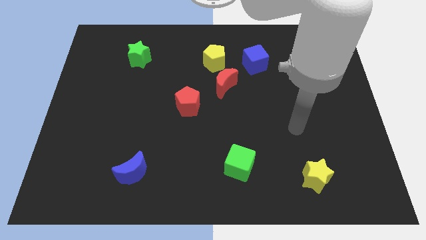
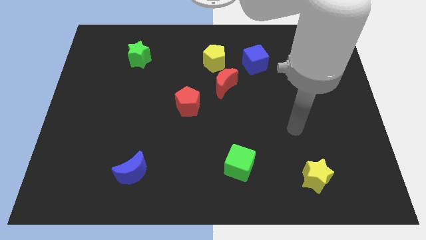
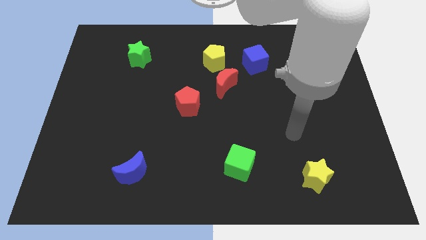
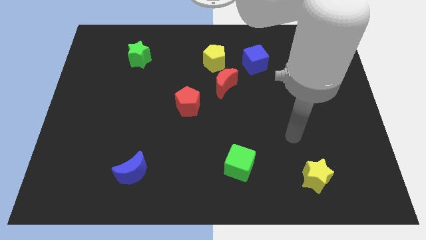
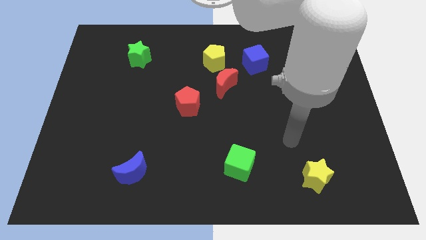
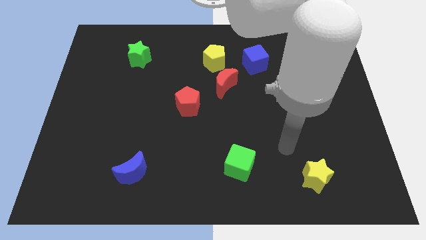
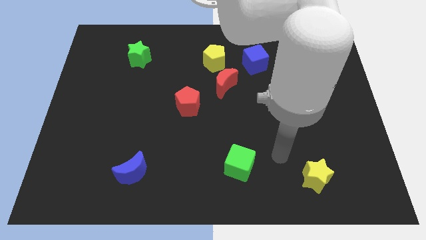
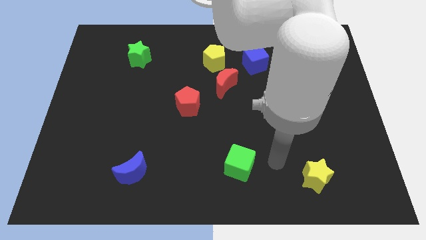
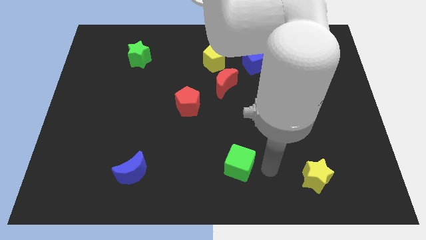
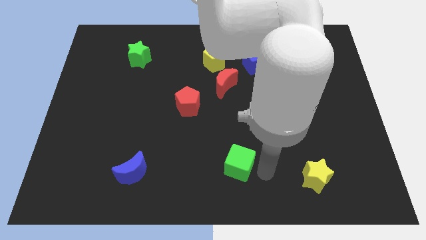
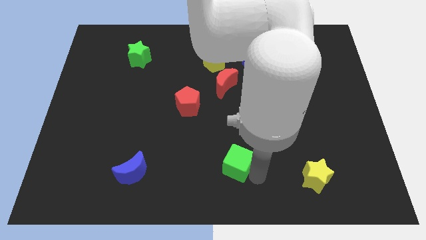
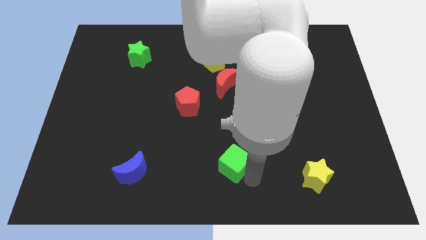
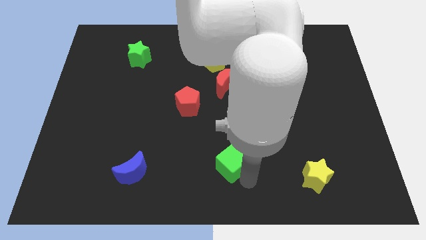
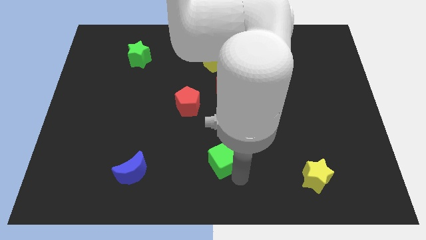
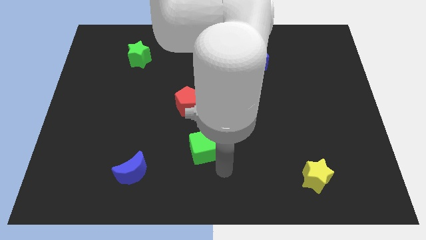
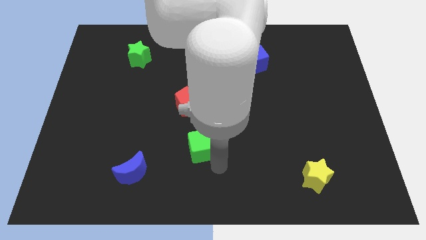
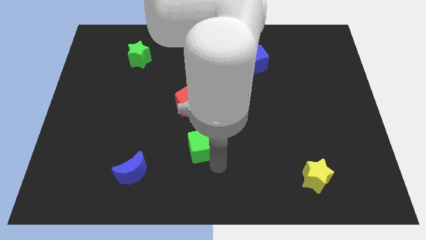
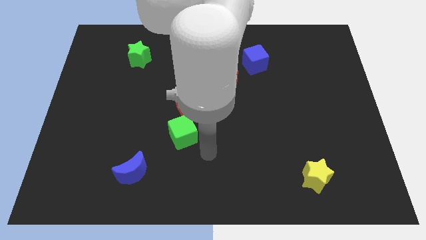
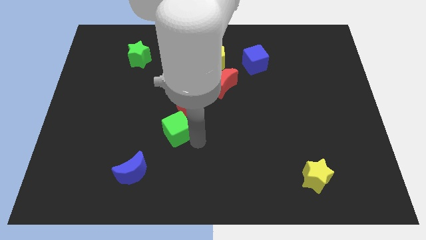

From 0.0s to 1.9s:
move green cube below red pentagon

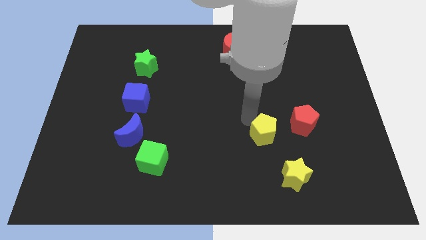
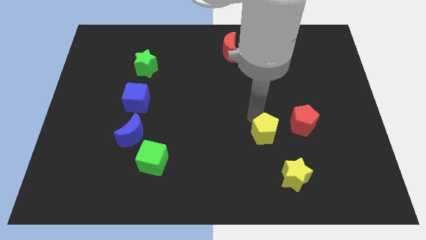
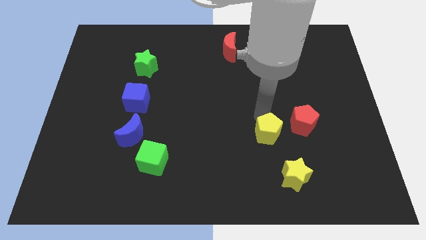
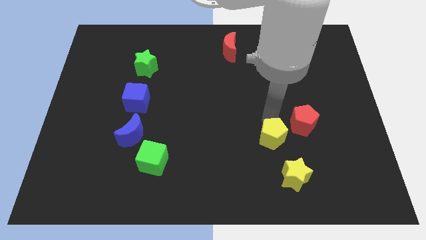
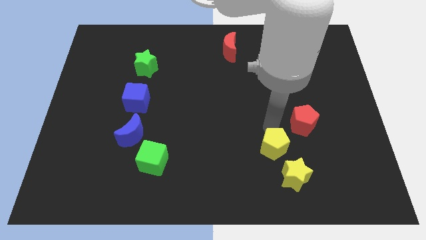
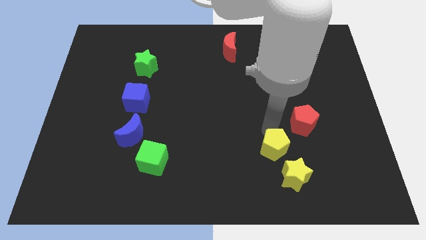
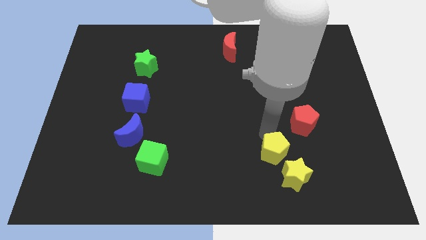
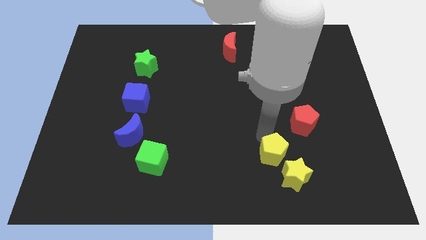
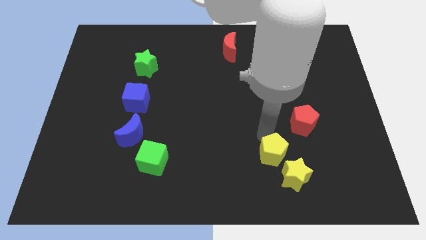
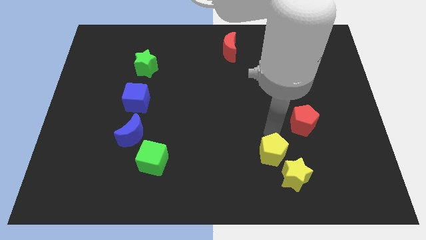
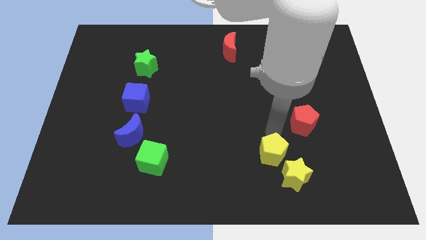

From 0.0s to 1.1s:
place the yellow pentagon diagonal to the yellow star

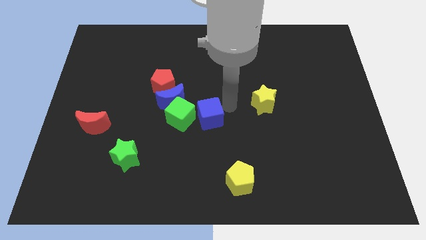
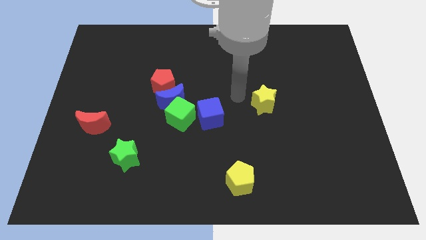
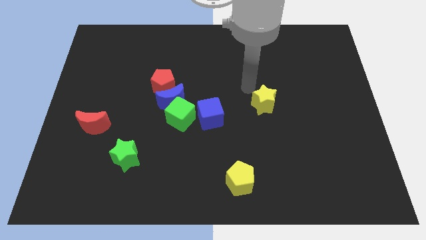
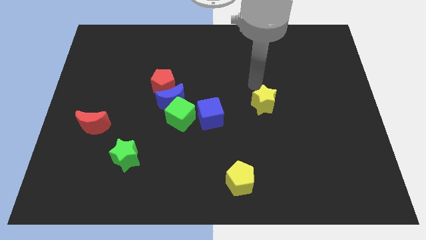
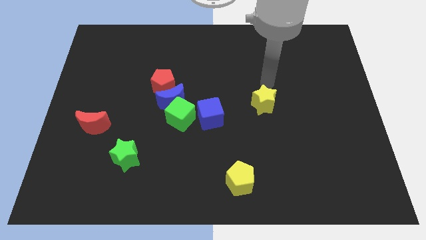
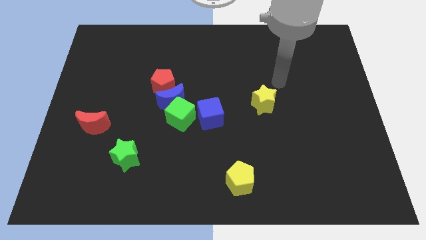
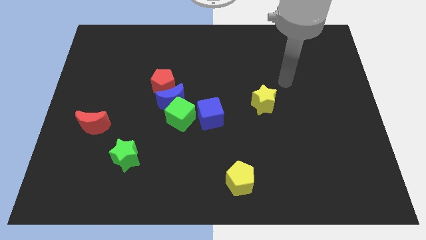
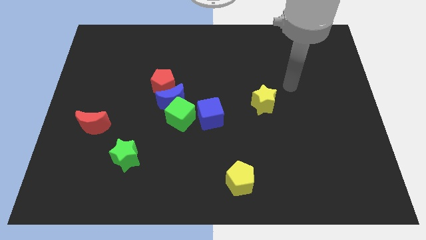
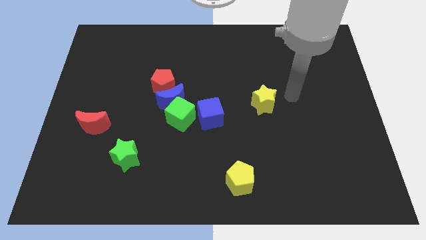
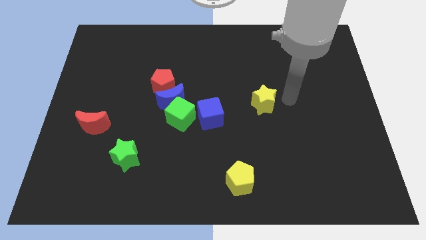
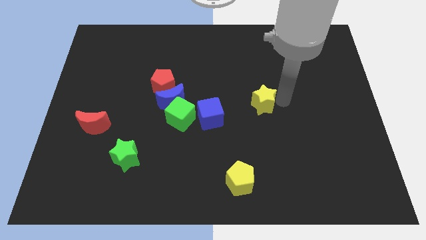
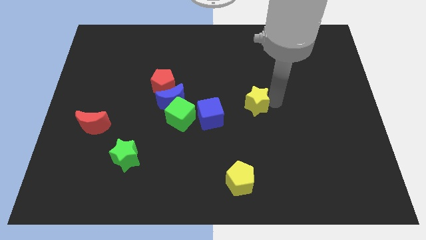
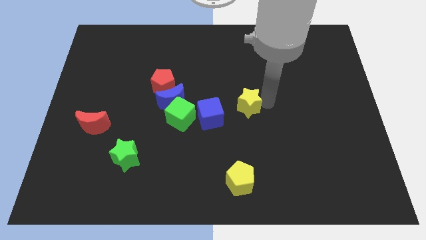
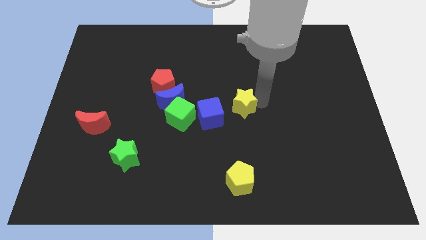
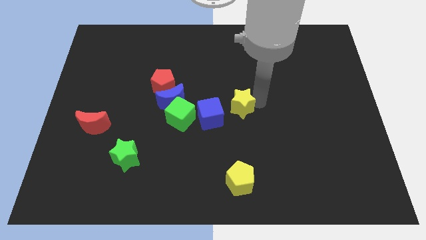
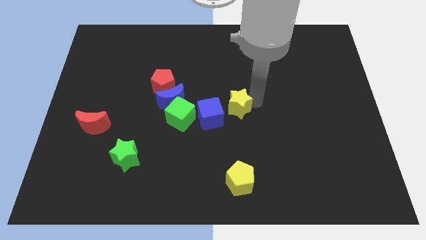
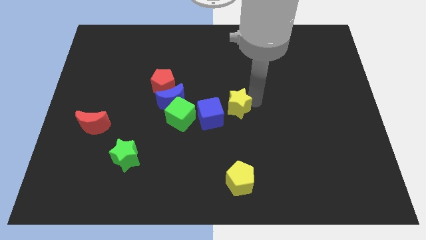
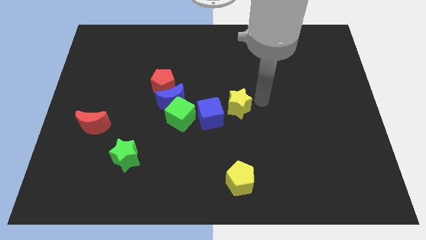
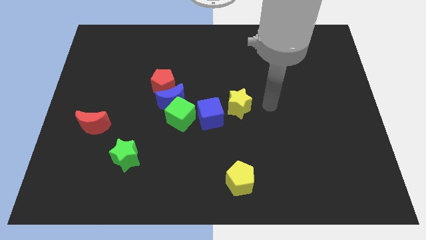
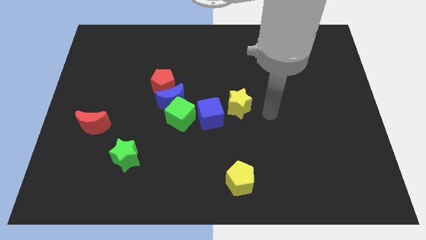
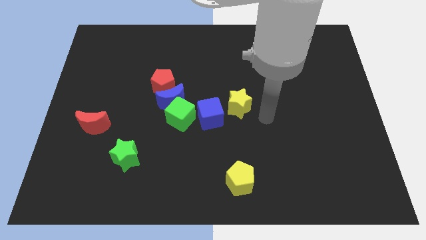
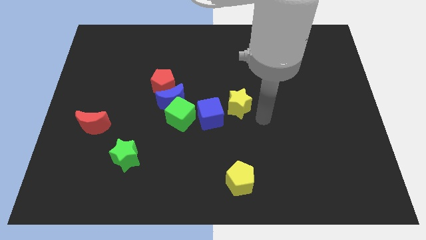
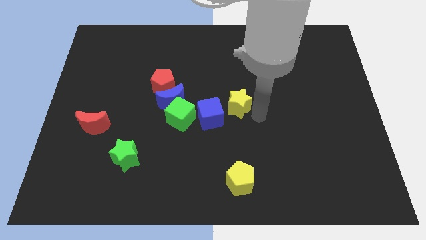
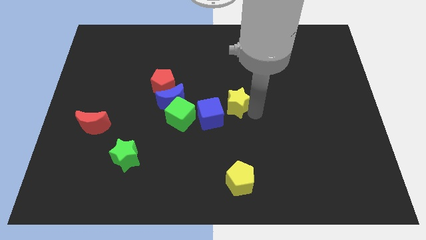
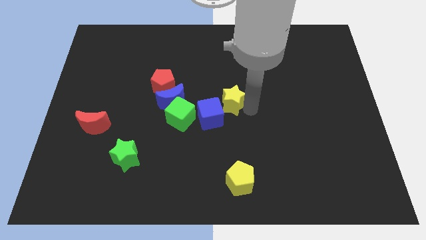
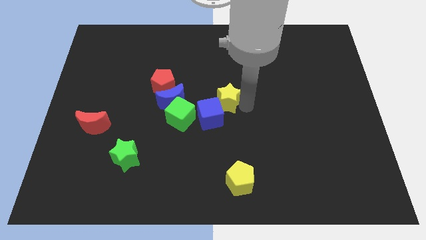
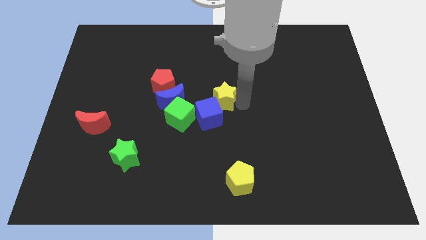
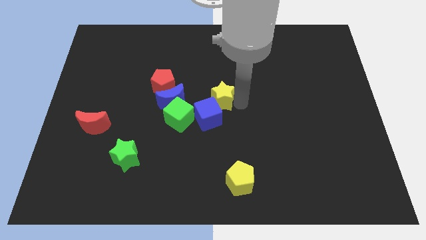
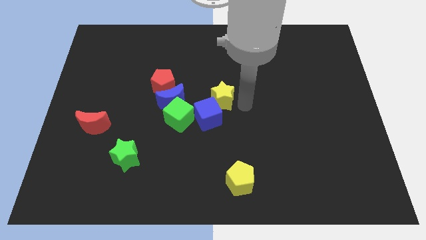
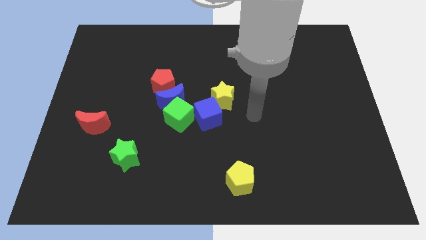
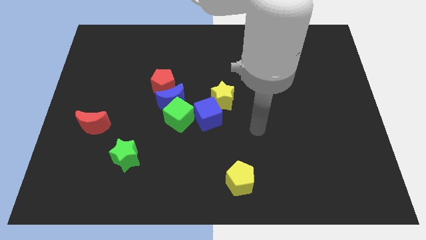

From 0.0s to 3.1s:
push the yellow pentagon into the top right of the blue cube

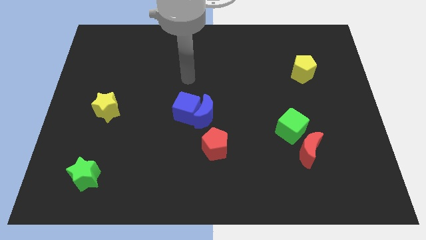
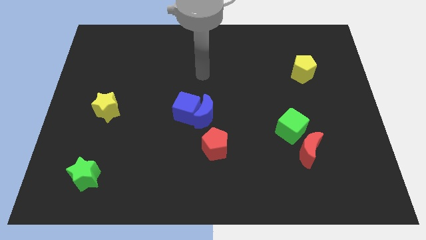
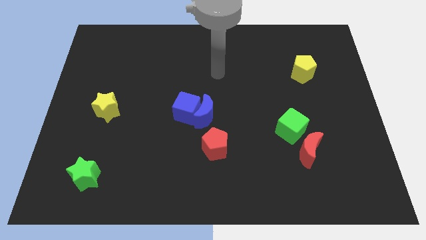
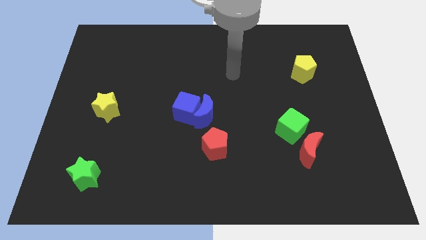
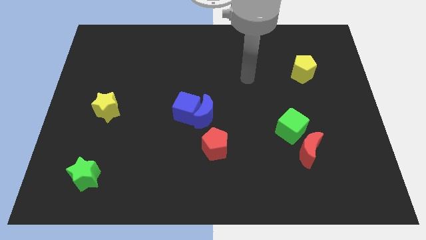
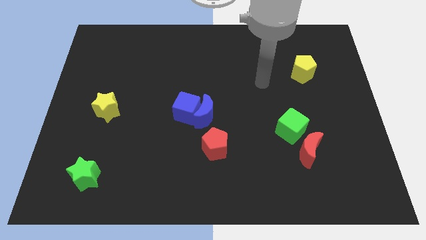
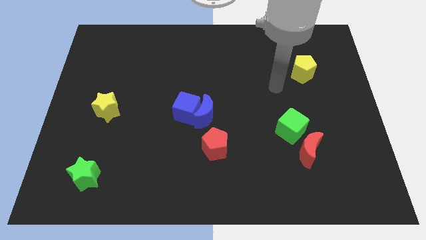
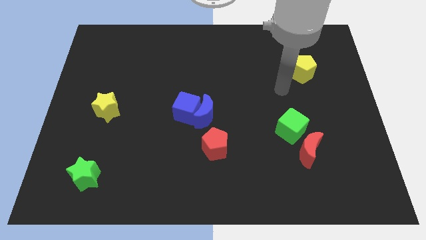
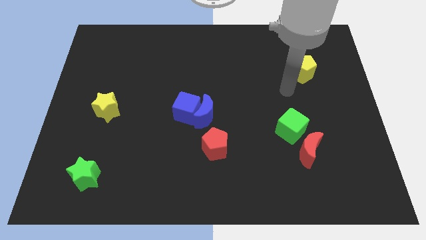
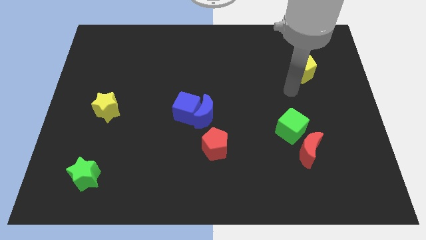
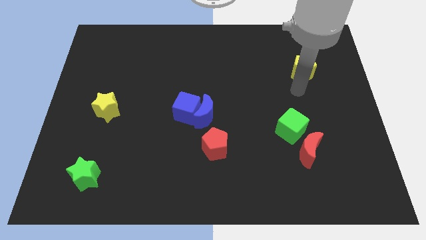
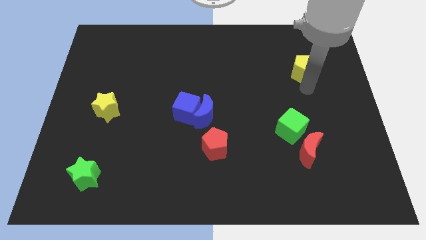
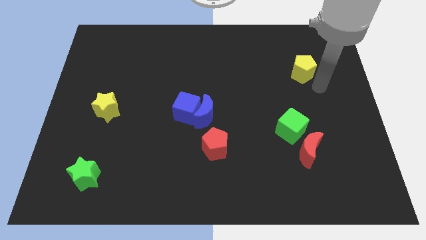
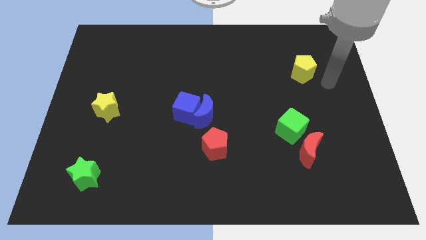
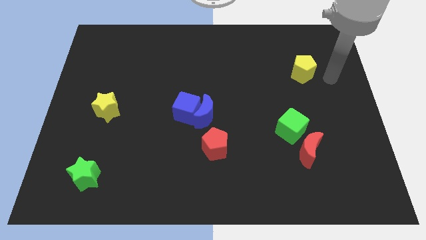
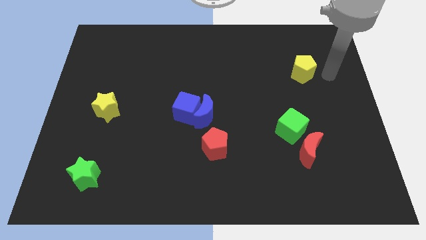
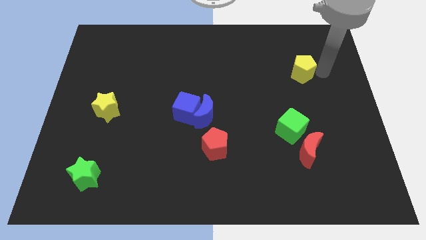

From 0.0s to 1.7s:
move your arm towards the yellow pentagon

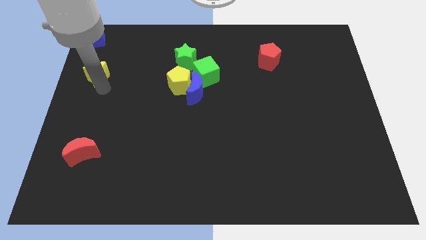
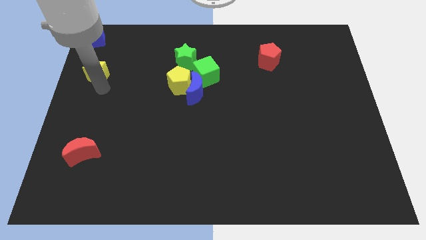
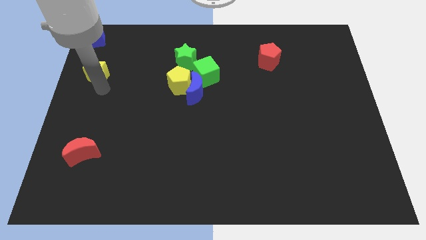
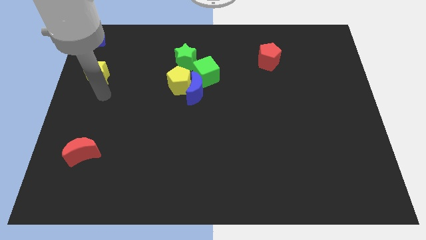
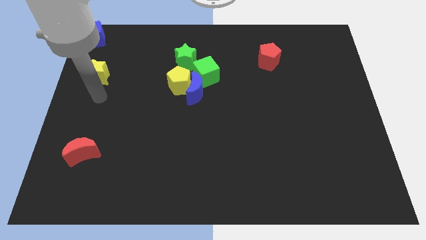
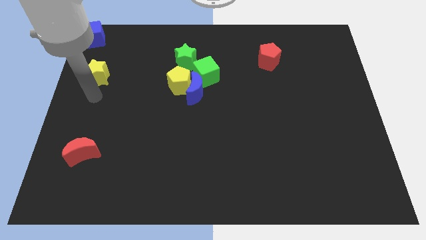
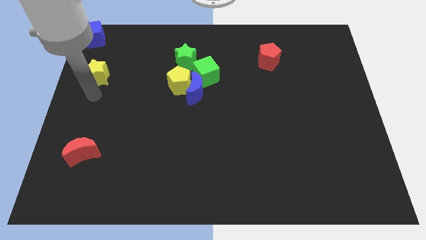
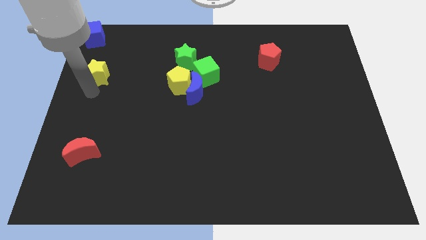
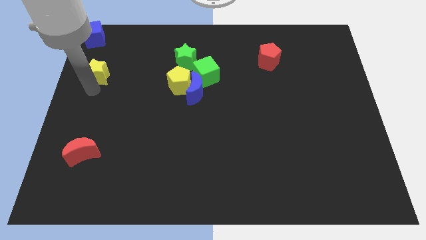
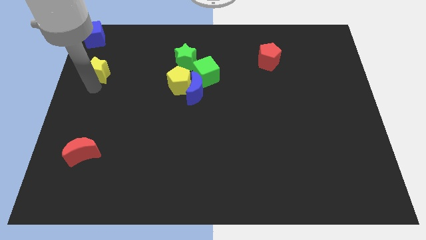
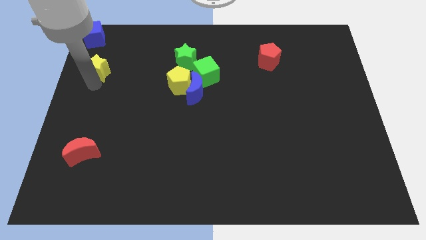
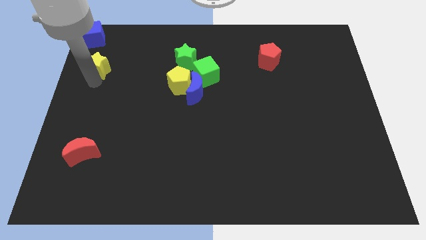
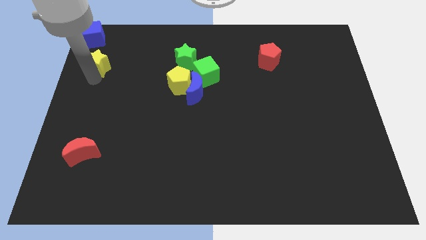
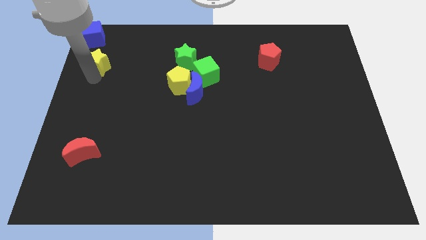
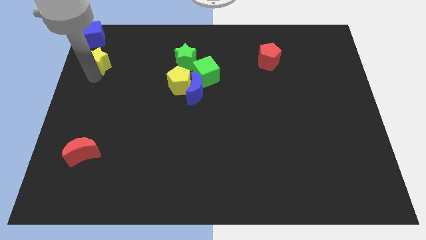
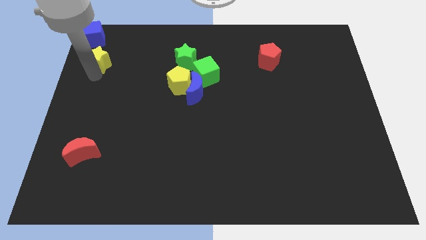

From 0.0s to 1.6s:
drag the yellow star towards the bottom side of the blue cube
